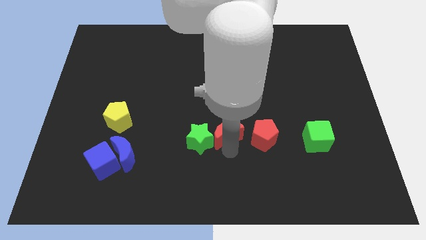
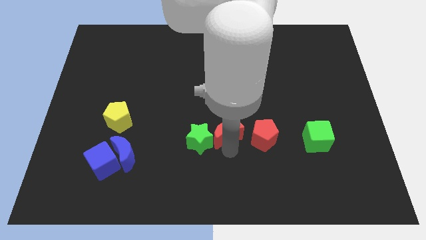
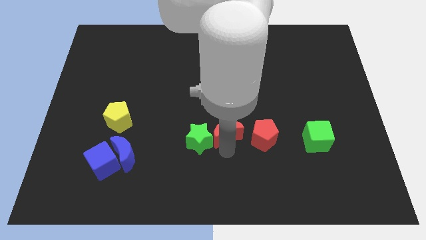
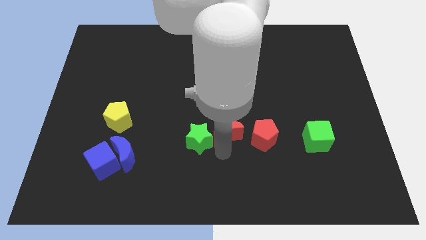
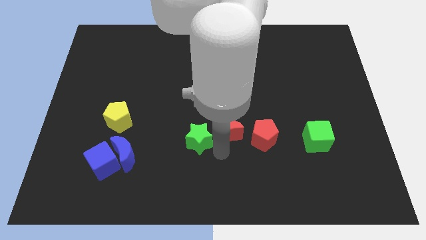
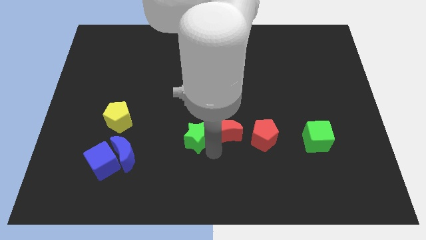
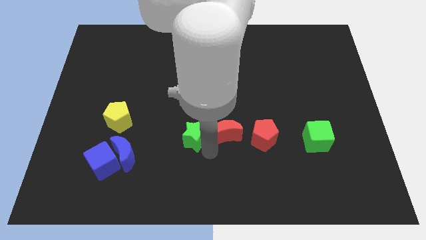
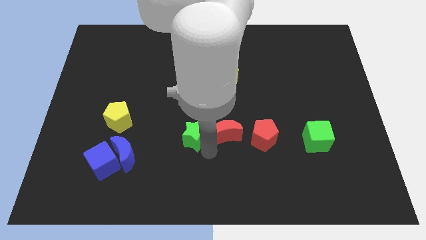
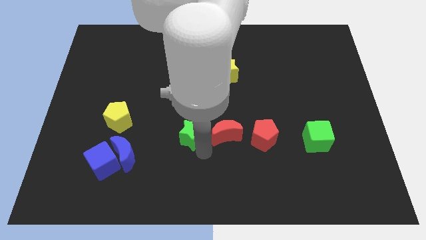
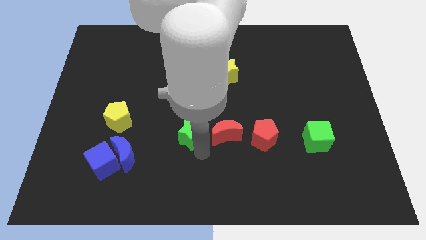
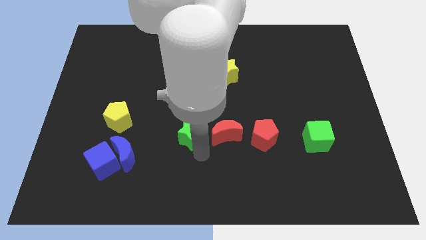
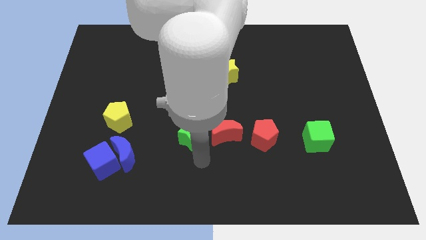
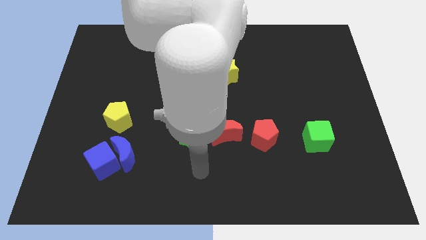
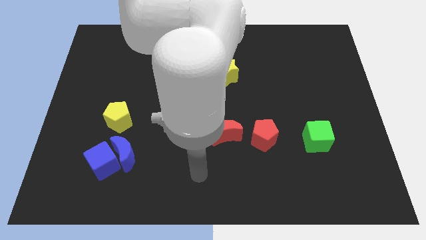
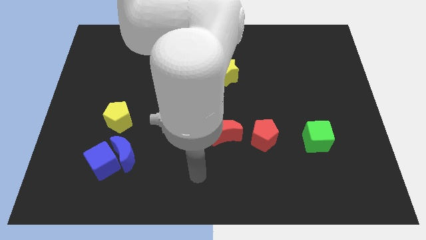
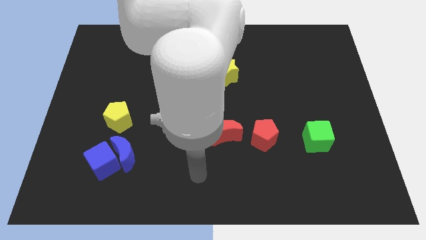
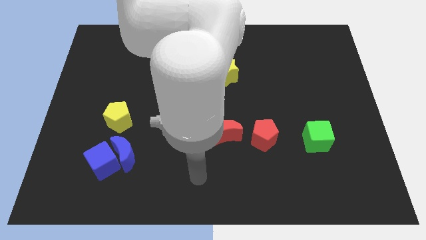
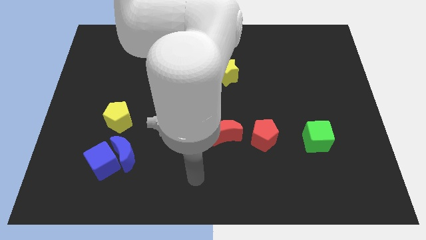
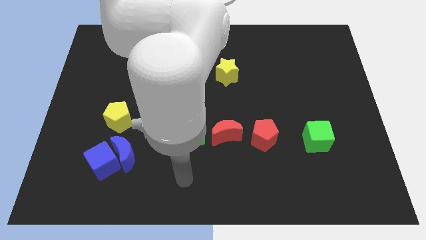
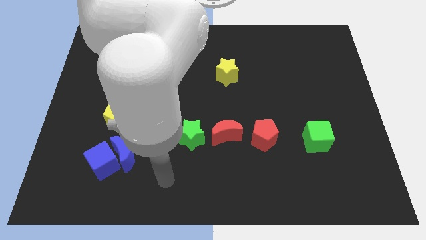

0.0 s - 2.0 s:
slightly push the green star to the left of red moon

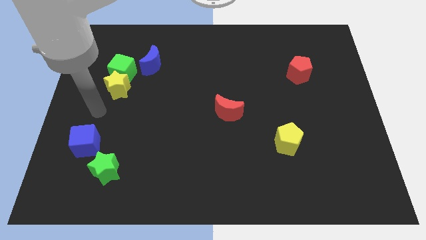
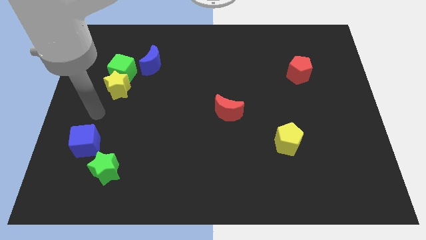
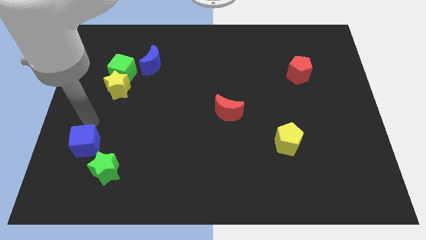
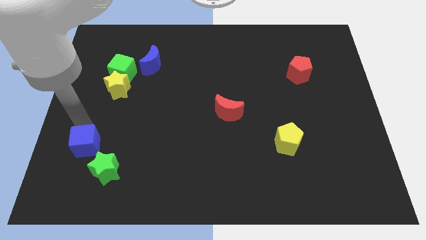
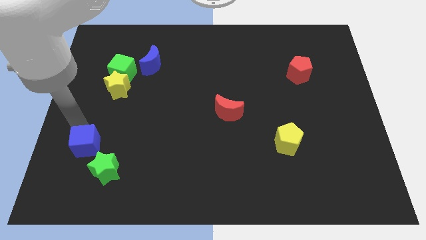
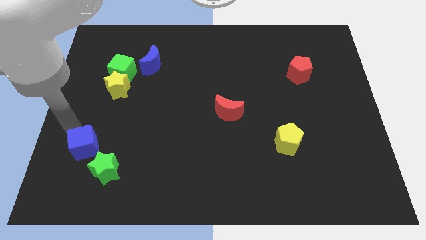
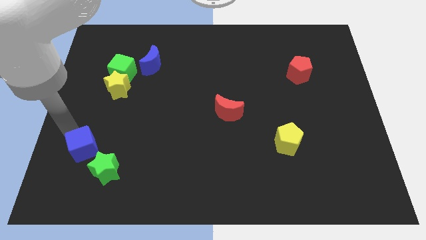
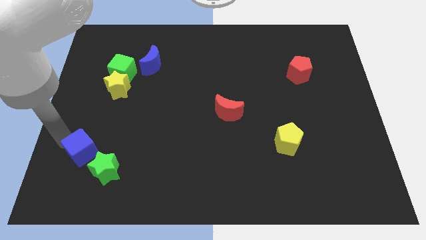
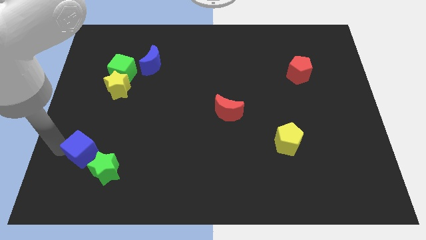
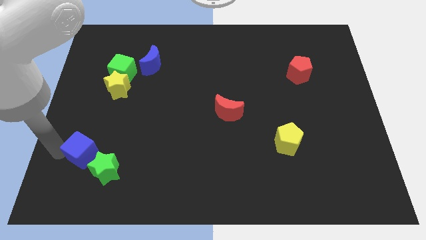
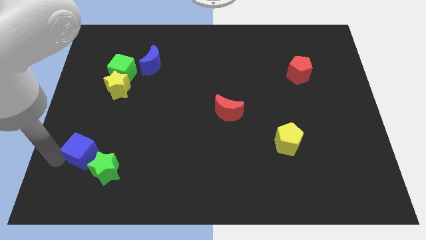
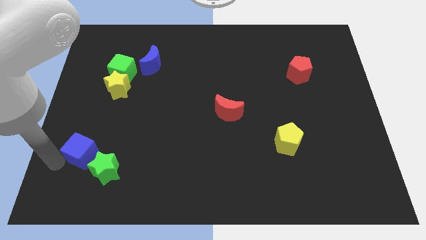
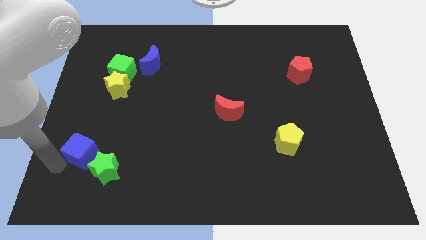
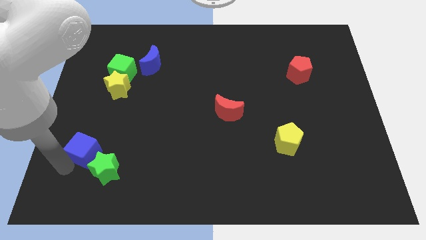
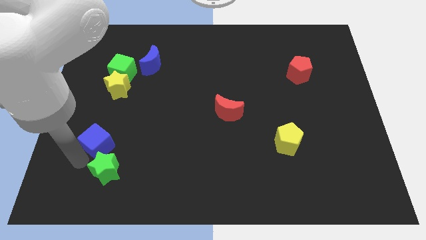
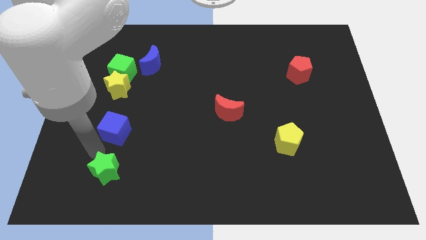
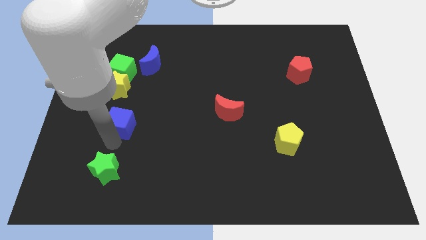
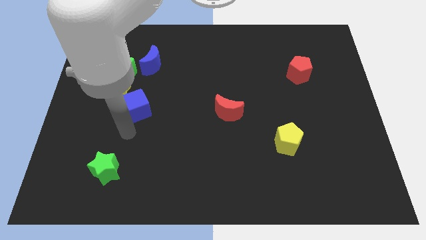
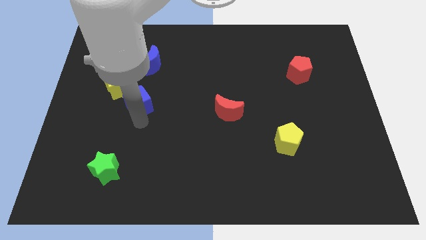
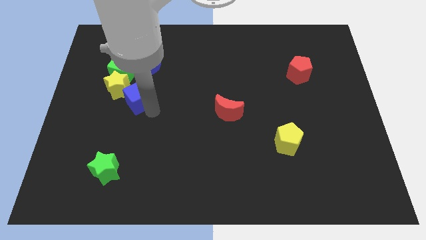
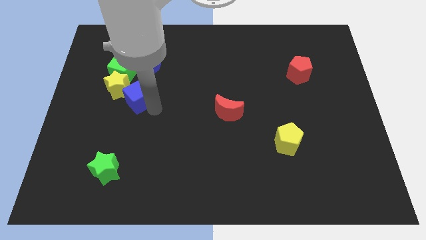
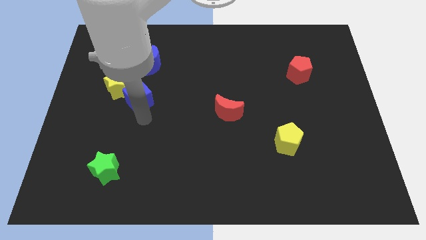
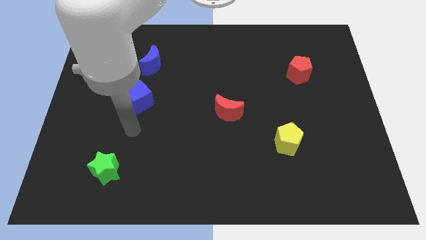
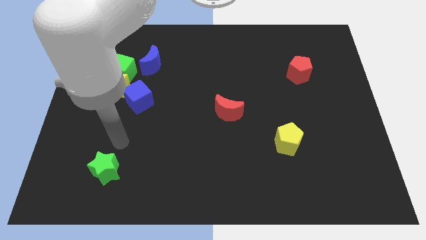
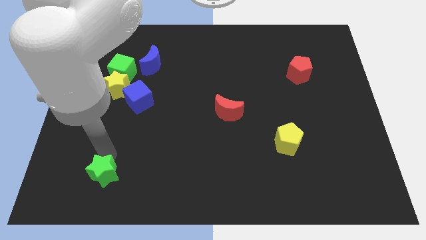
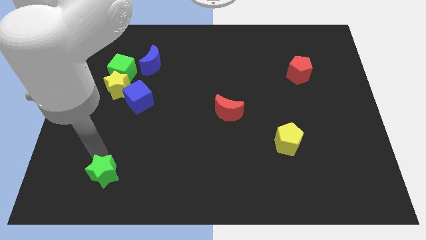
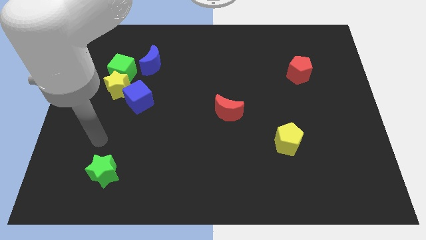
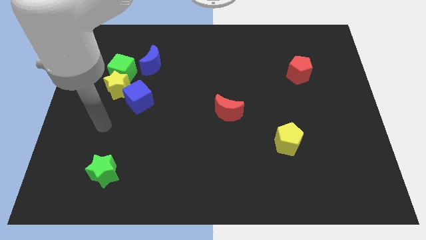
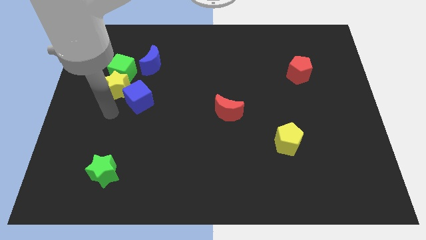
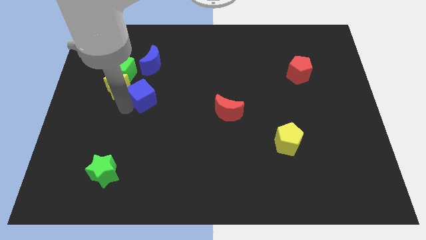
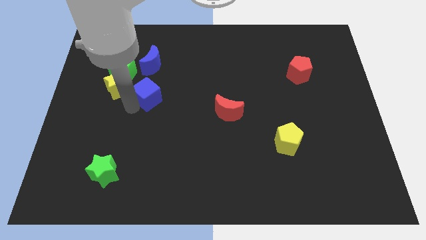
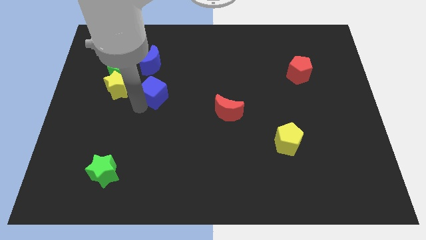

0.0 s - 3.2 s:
move the blue cube to the right side of the yellow star

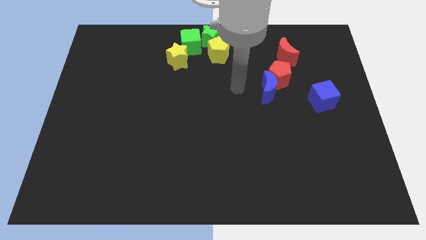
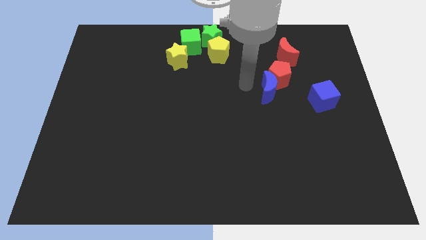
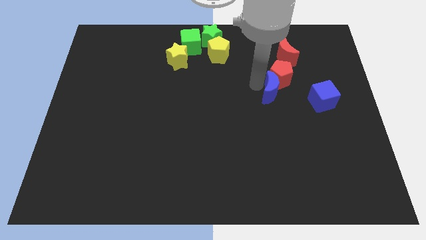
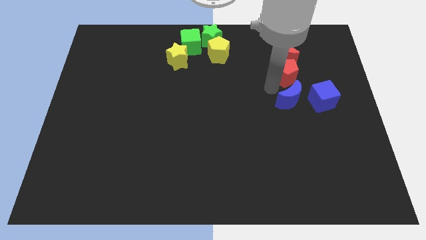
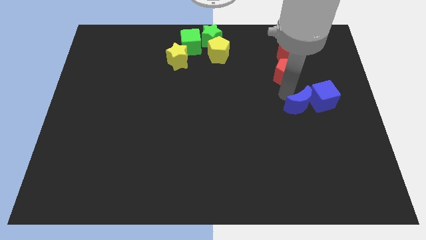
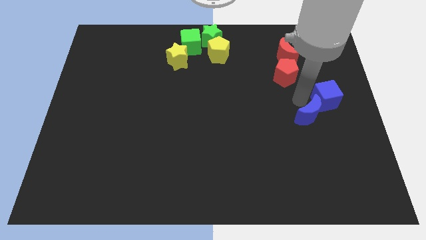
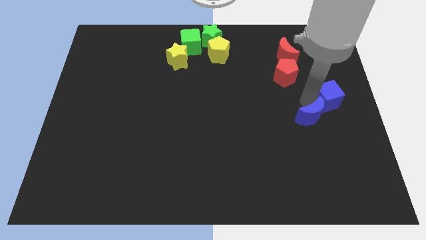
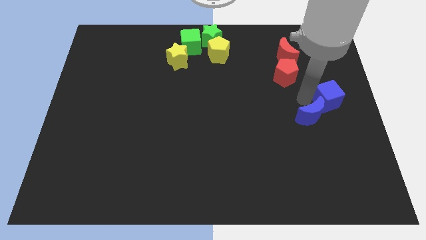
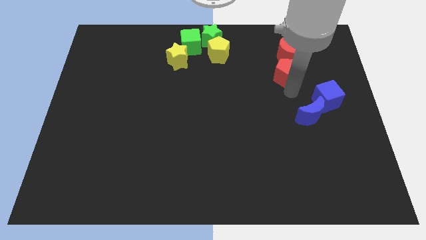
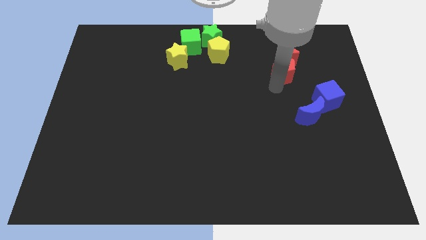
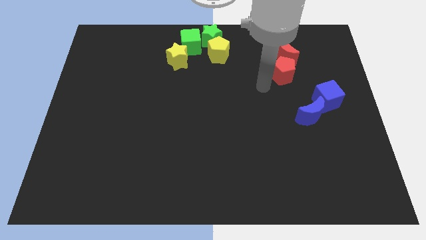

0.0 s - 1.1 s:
separate blue moon from the red pentagon

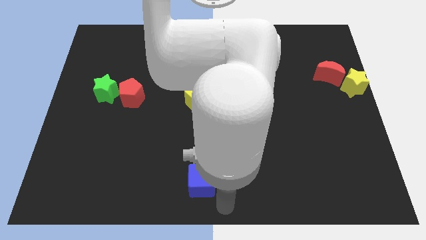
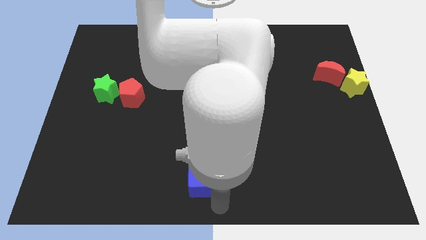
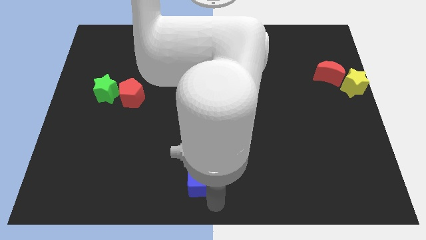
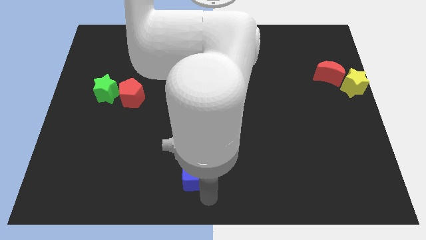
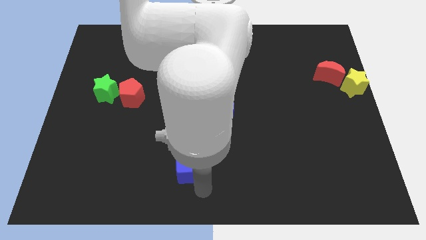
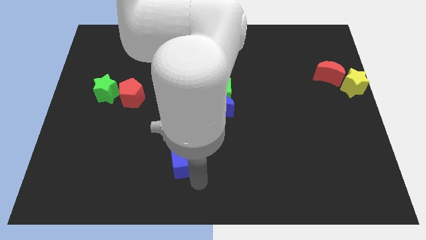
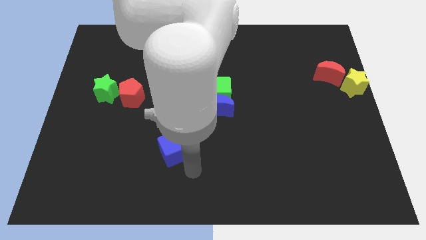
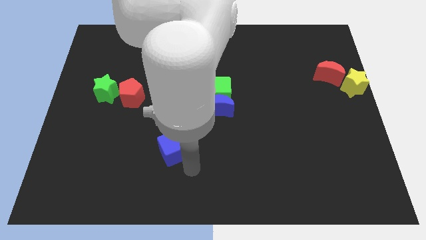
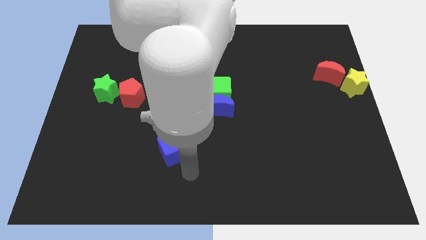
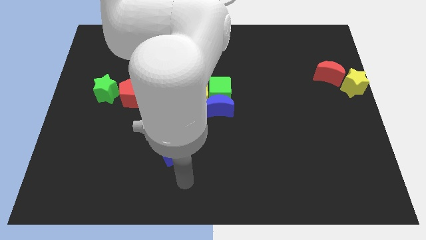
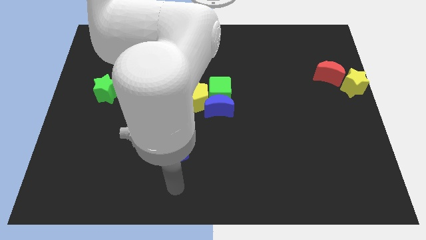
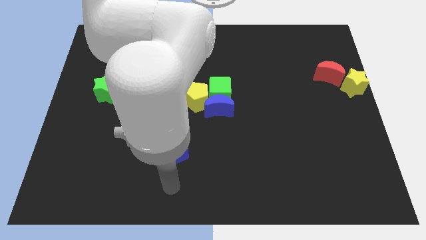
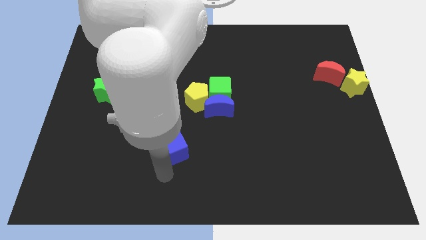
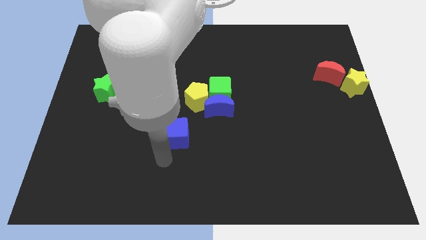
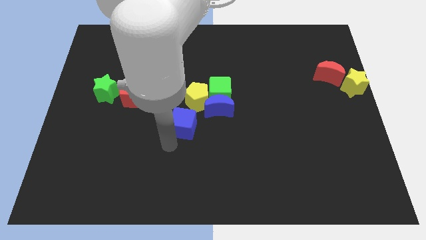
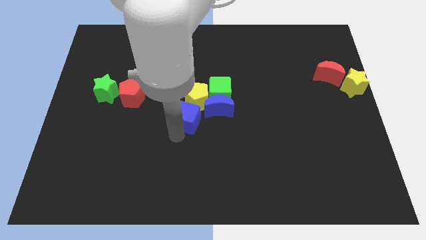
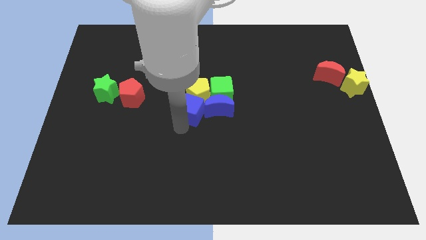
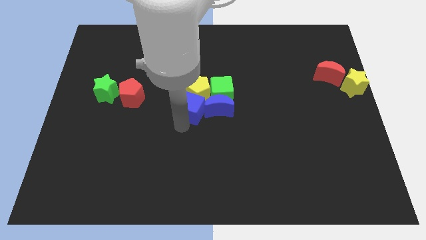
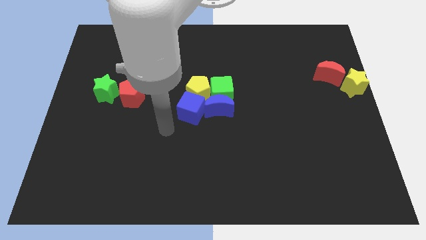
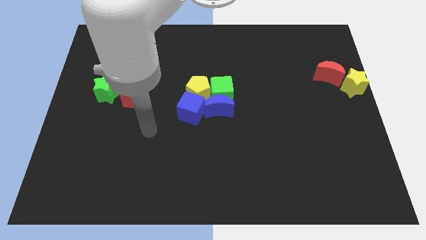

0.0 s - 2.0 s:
place a blue cube close to the yellow pentagon

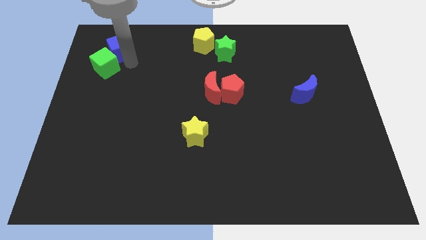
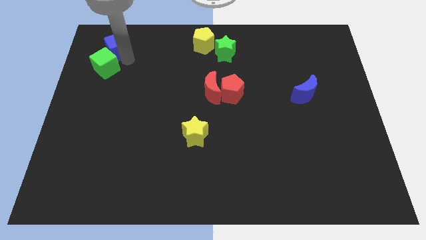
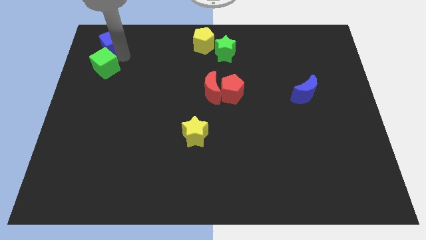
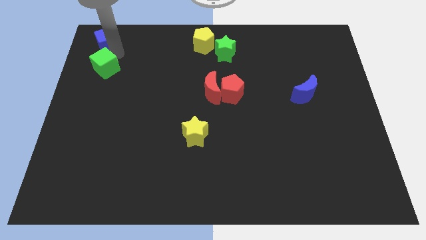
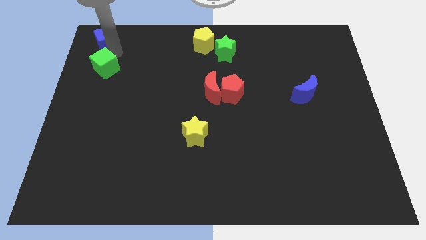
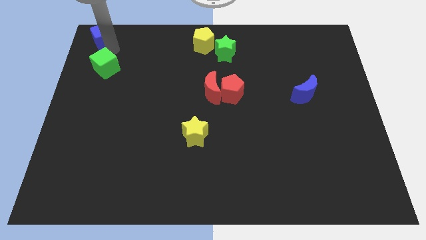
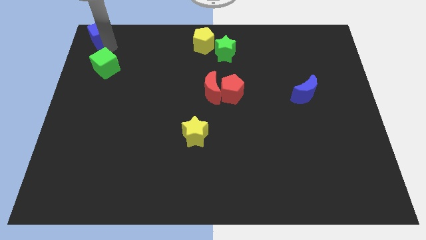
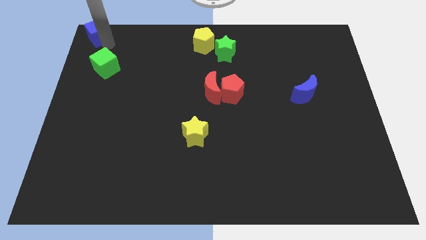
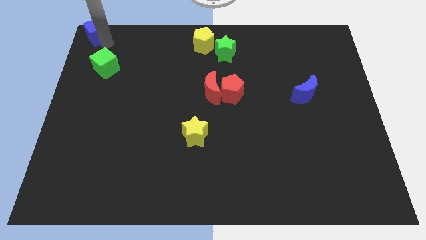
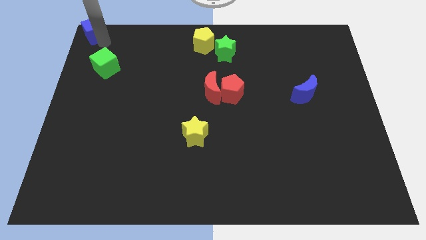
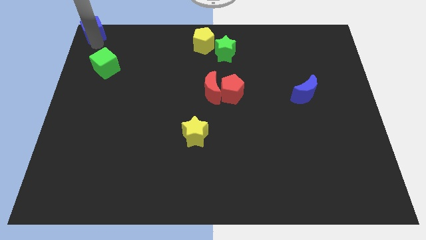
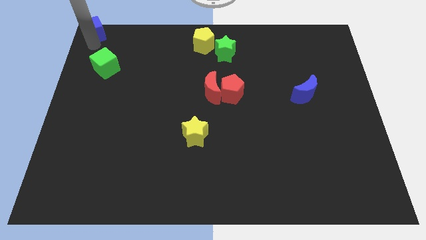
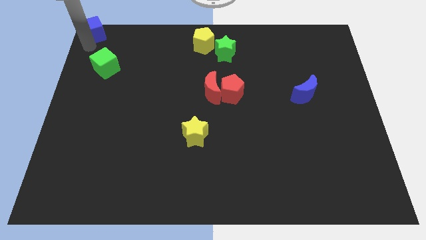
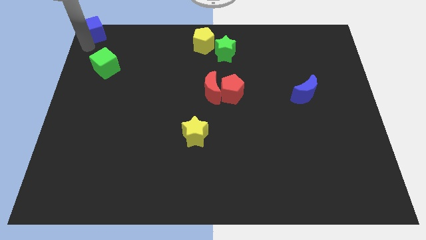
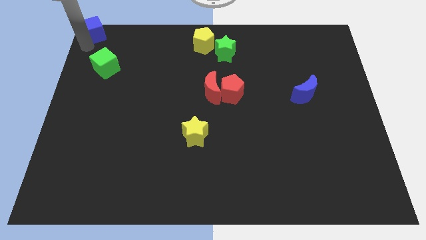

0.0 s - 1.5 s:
push the blue cube to the top left of the board
